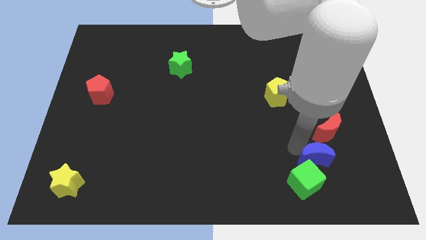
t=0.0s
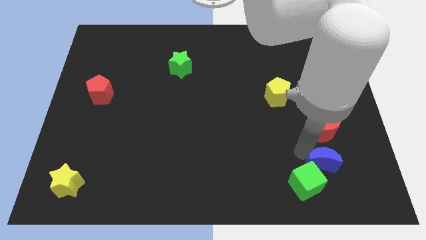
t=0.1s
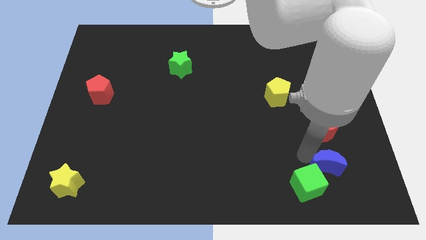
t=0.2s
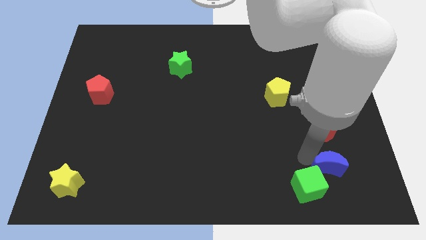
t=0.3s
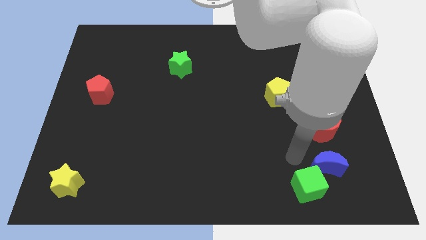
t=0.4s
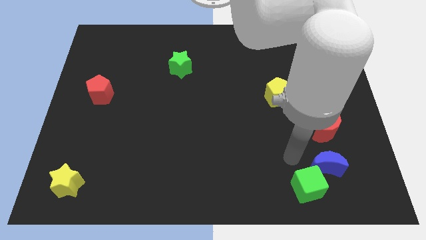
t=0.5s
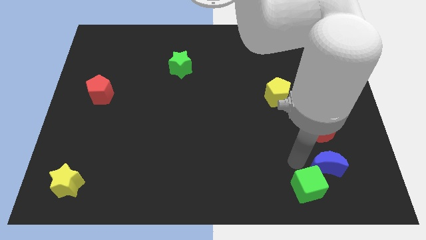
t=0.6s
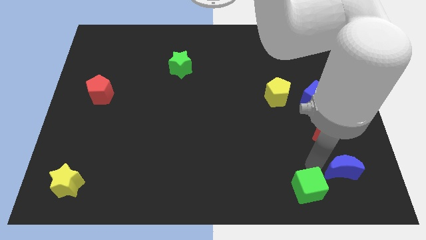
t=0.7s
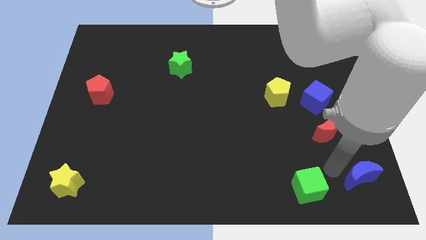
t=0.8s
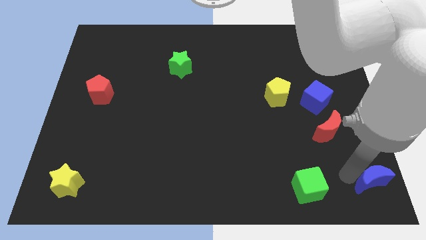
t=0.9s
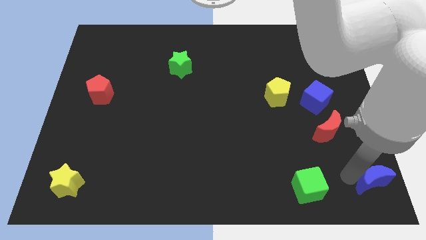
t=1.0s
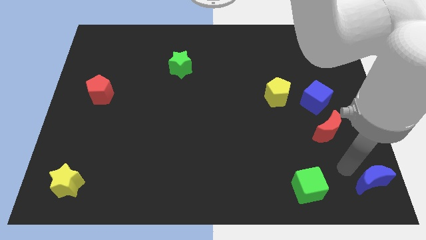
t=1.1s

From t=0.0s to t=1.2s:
move blue moon diagonal to the right of the green cube

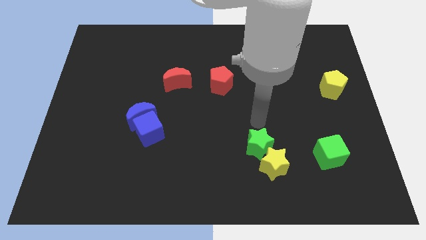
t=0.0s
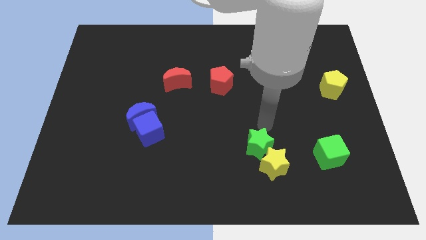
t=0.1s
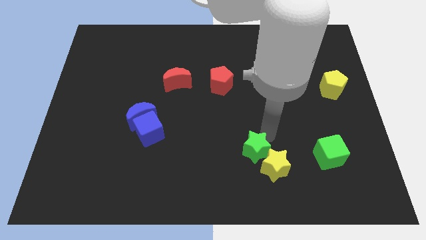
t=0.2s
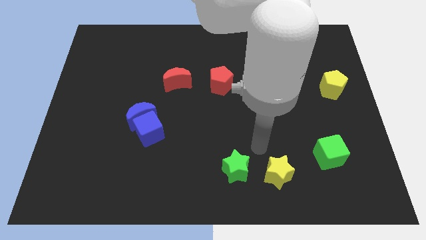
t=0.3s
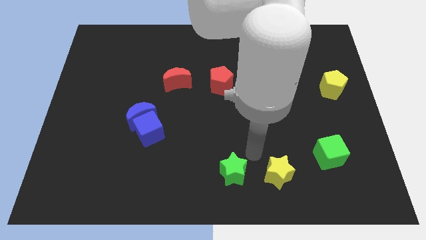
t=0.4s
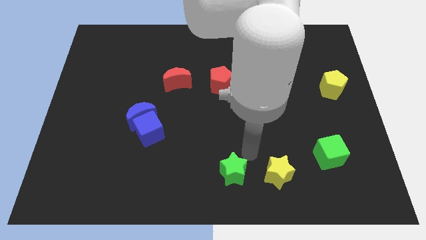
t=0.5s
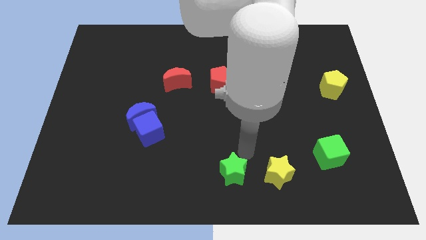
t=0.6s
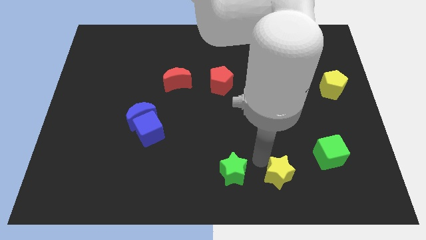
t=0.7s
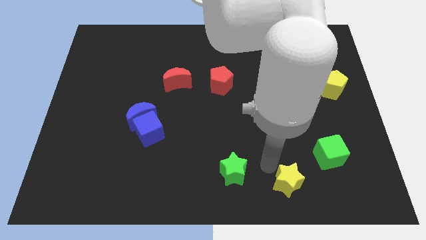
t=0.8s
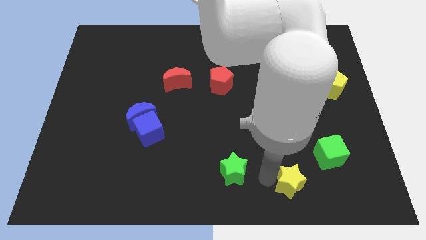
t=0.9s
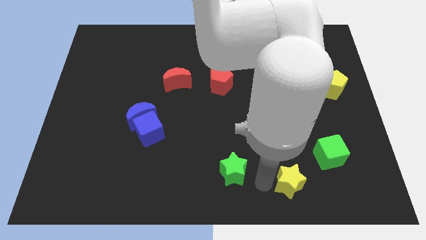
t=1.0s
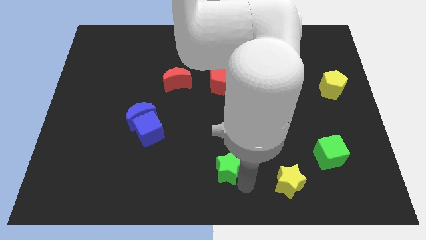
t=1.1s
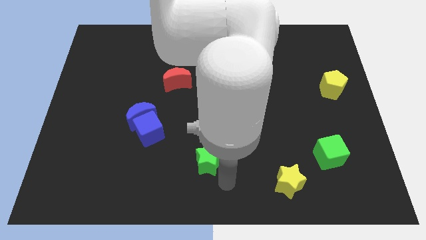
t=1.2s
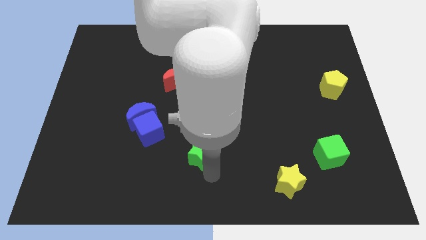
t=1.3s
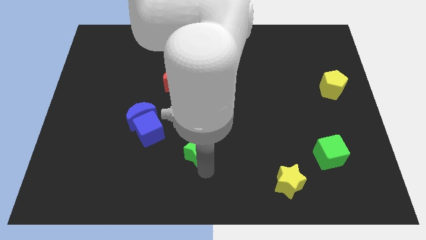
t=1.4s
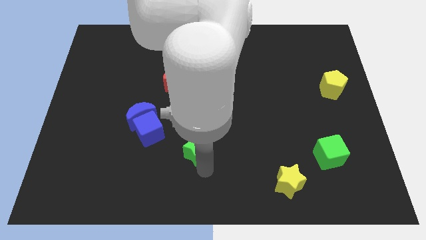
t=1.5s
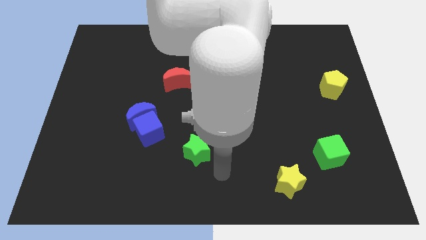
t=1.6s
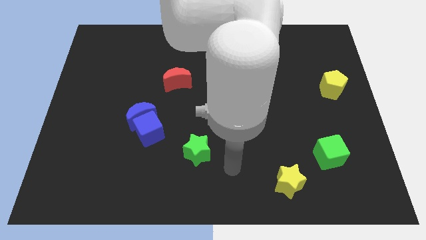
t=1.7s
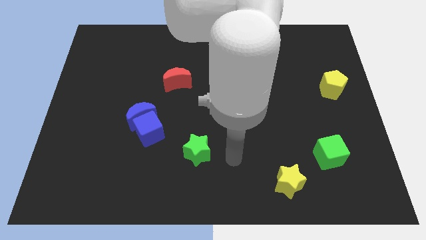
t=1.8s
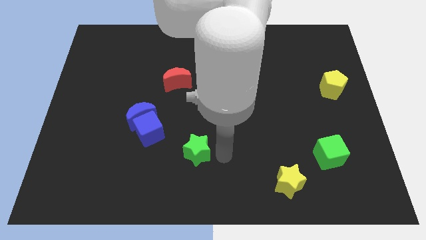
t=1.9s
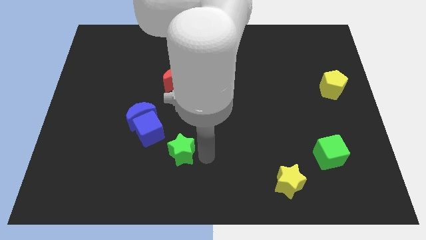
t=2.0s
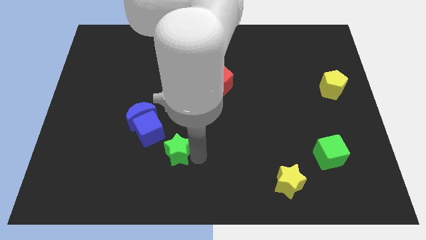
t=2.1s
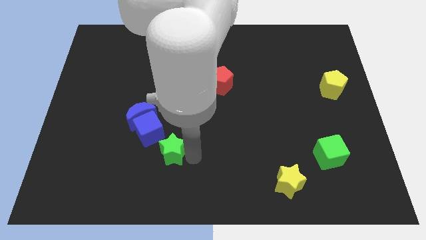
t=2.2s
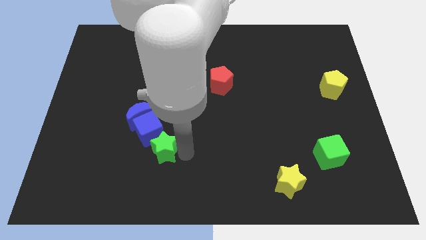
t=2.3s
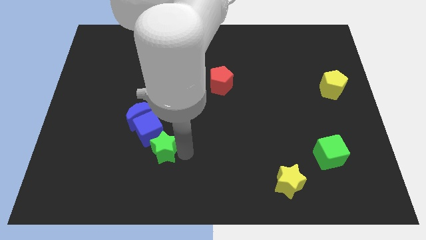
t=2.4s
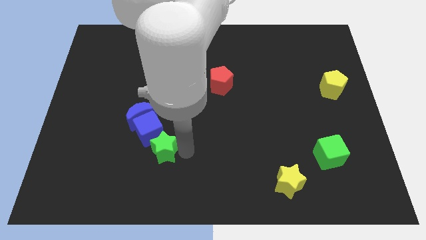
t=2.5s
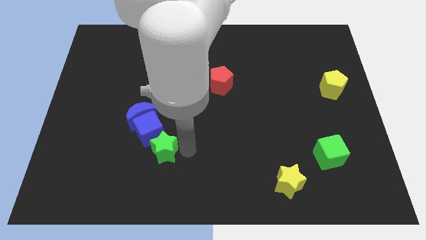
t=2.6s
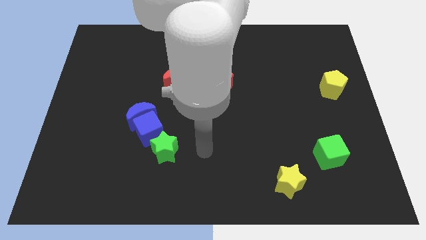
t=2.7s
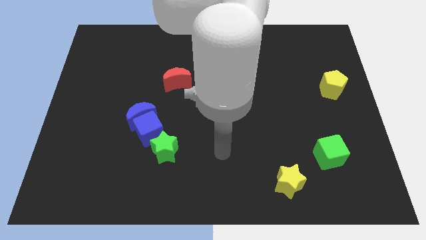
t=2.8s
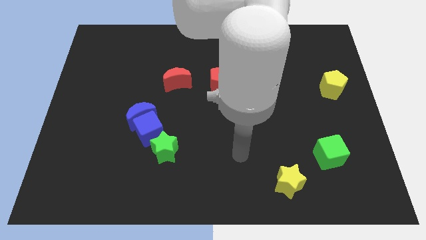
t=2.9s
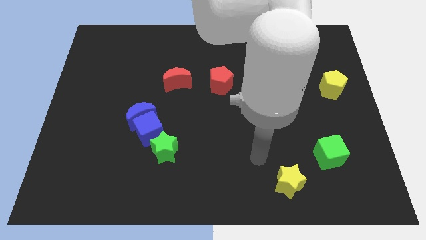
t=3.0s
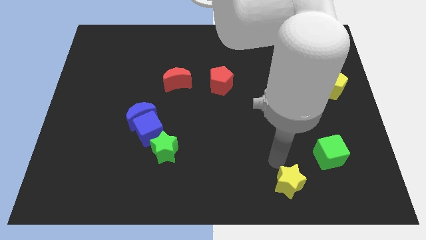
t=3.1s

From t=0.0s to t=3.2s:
slide the green star diagonally to the blue cube

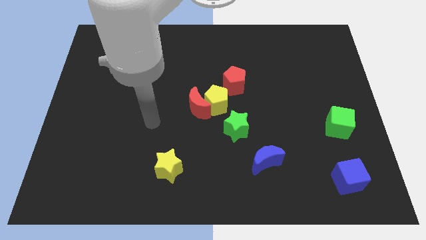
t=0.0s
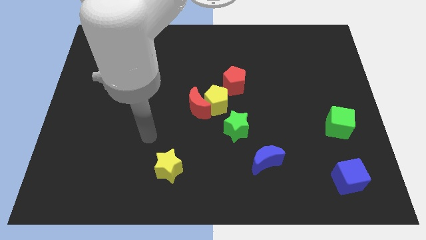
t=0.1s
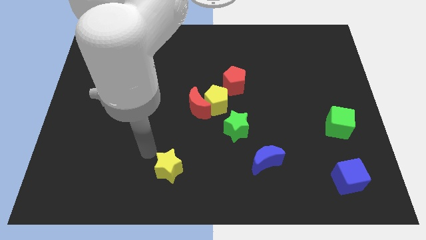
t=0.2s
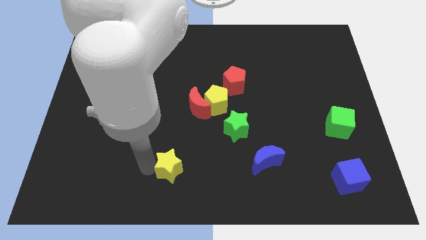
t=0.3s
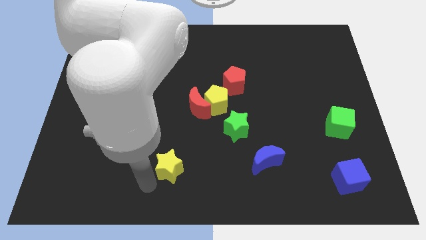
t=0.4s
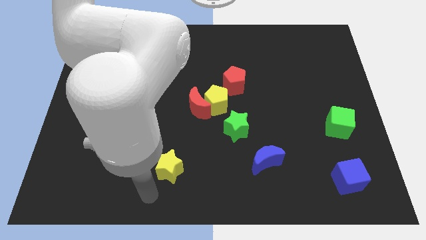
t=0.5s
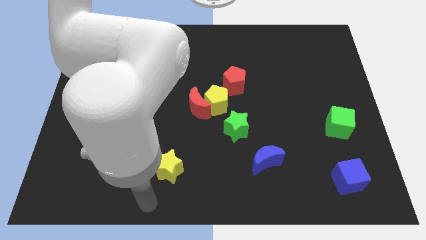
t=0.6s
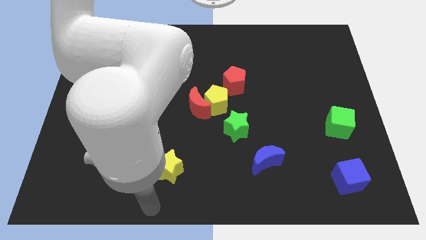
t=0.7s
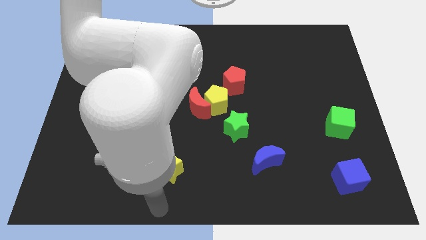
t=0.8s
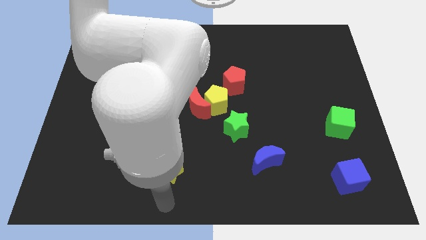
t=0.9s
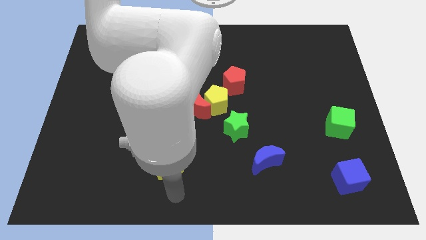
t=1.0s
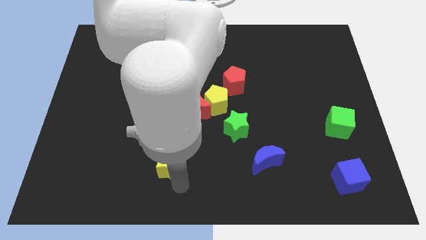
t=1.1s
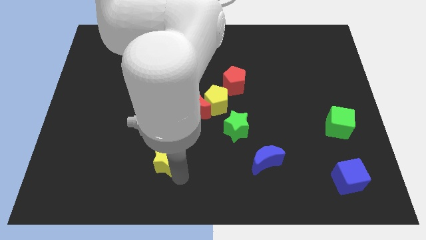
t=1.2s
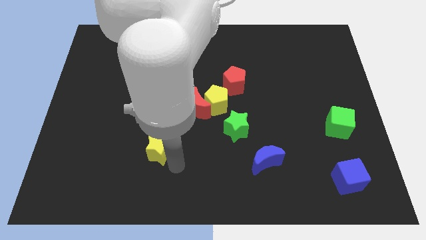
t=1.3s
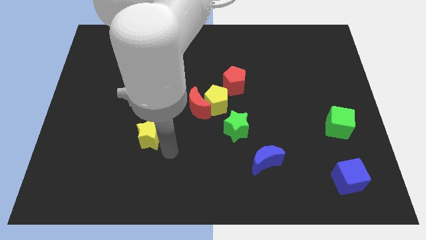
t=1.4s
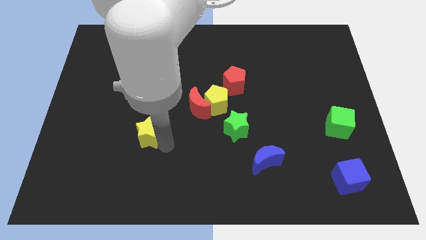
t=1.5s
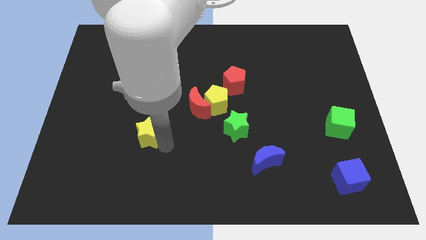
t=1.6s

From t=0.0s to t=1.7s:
slightly push the yellow star to the bottom left side of the red moon

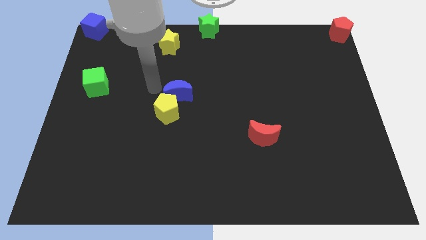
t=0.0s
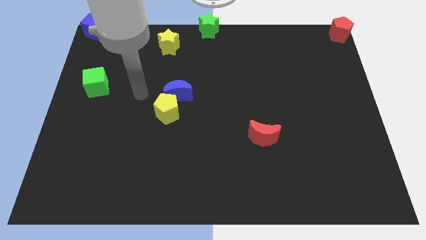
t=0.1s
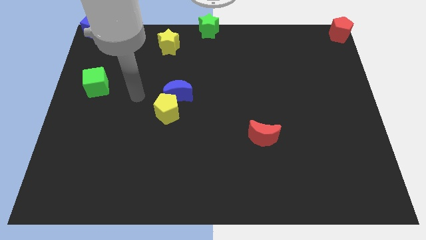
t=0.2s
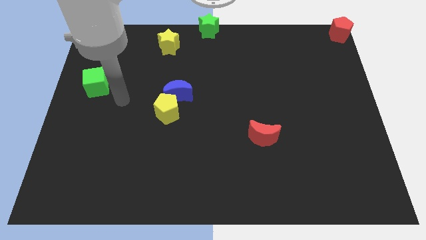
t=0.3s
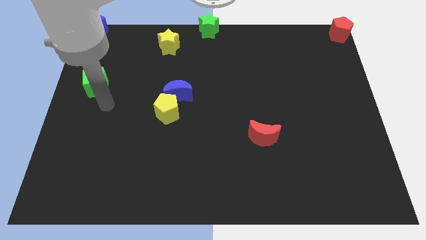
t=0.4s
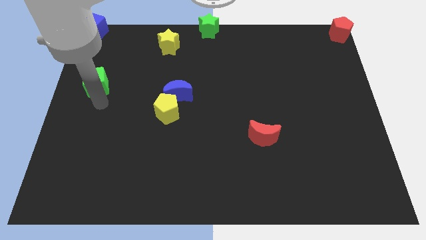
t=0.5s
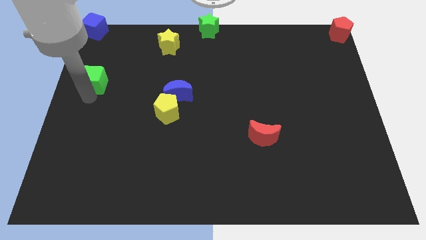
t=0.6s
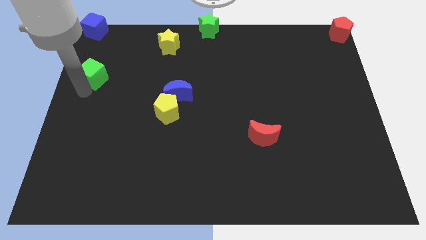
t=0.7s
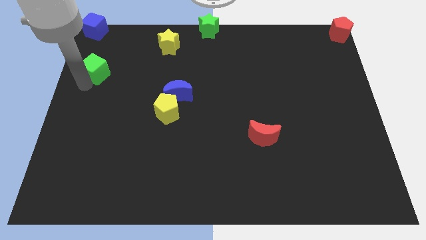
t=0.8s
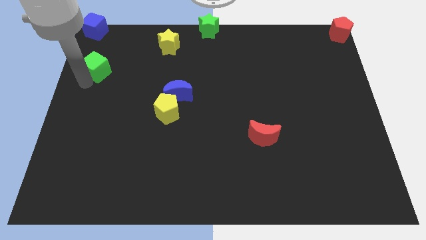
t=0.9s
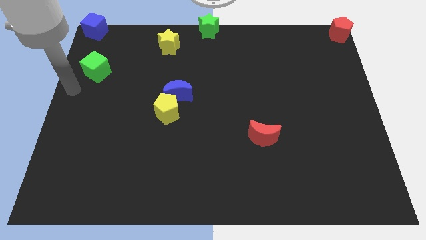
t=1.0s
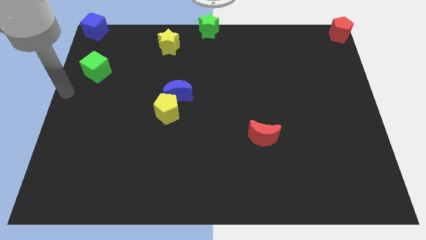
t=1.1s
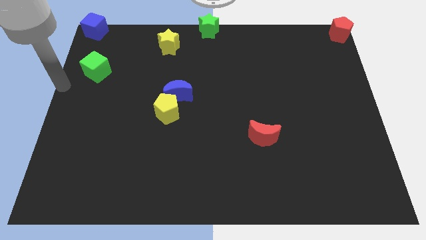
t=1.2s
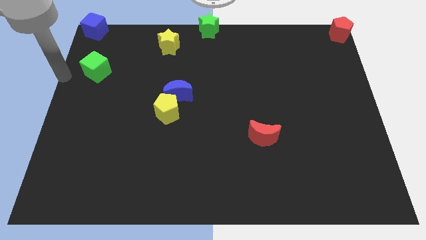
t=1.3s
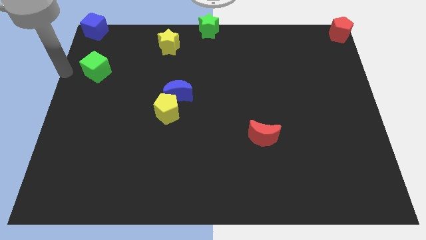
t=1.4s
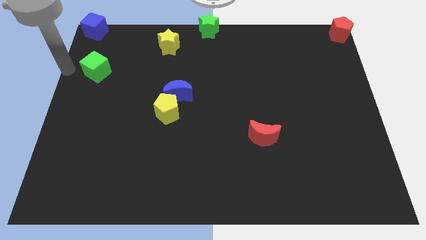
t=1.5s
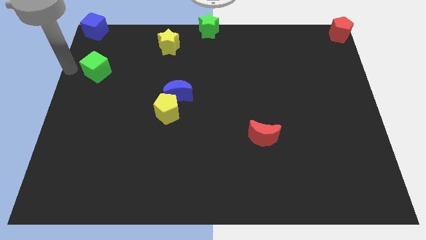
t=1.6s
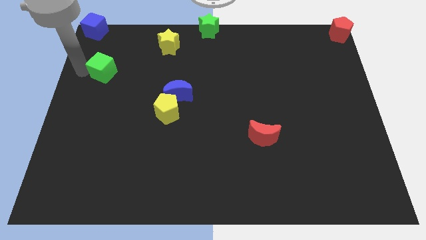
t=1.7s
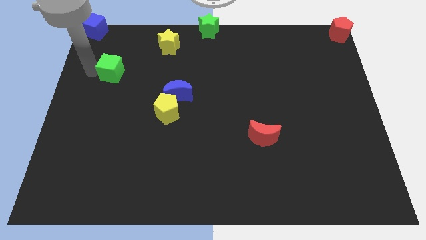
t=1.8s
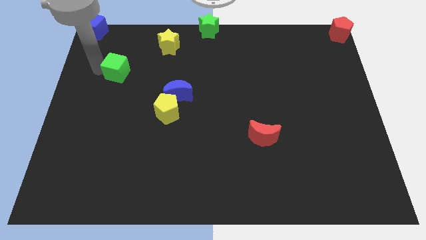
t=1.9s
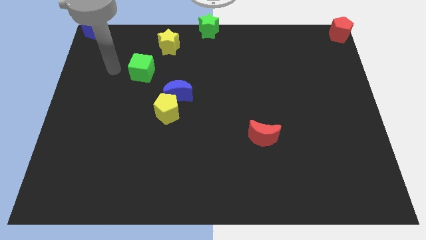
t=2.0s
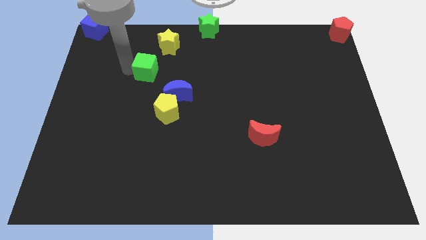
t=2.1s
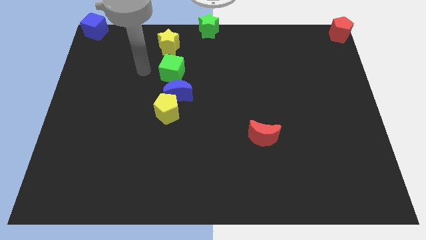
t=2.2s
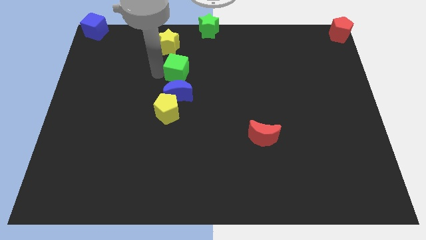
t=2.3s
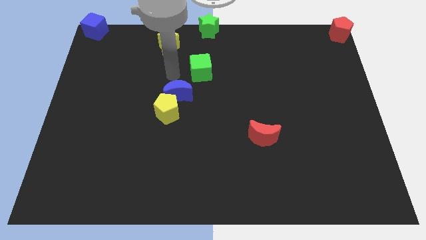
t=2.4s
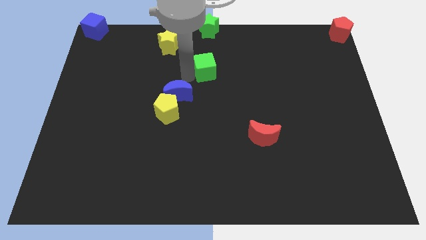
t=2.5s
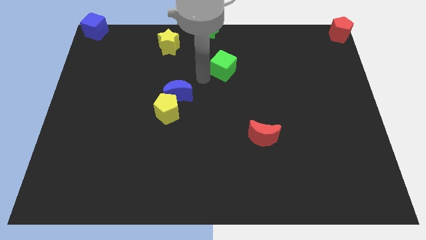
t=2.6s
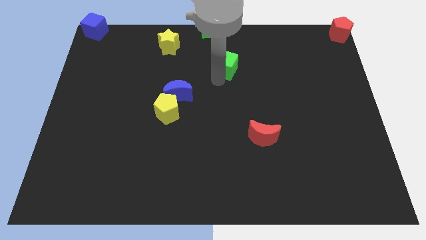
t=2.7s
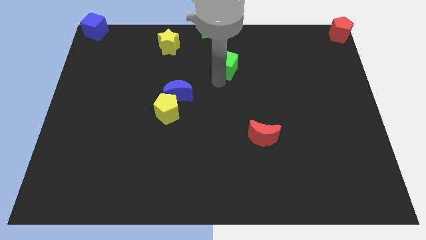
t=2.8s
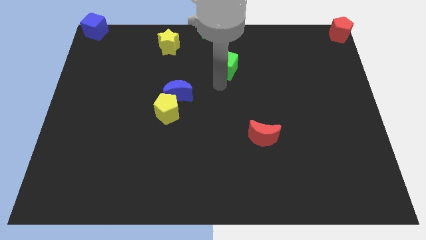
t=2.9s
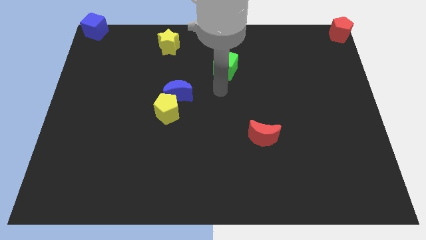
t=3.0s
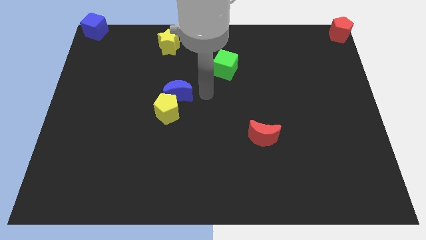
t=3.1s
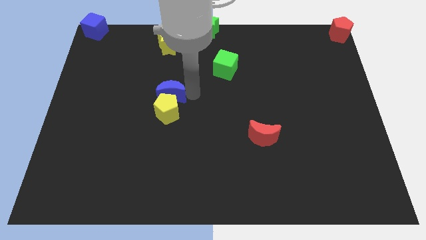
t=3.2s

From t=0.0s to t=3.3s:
push the green cube towards the center top of the board
